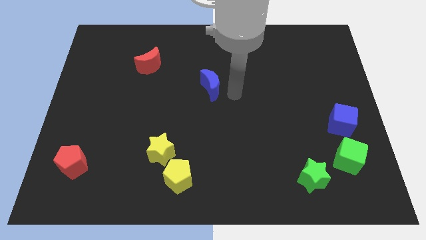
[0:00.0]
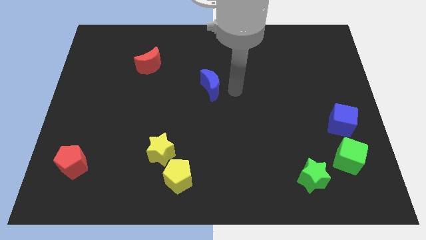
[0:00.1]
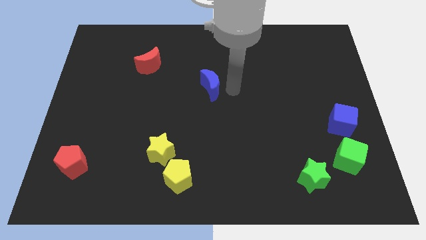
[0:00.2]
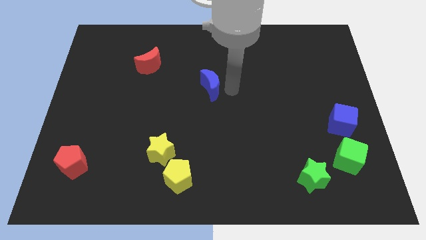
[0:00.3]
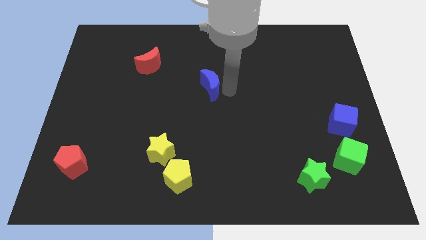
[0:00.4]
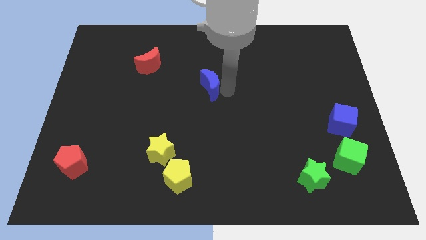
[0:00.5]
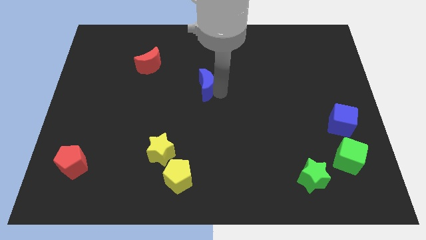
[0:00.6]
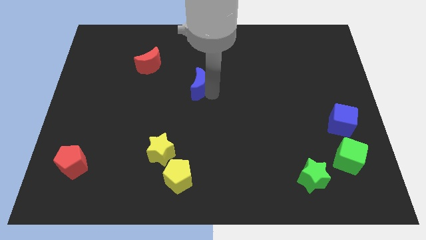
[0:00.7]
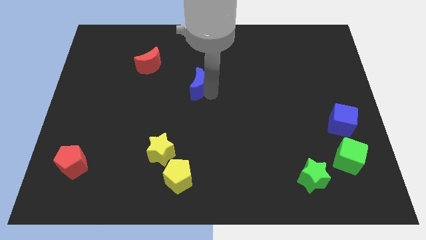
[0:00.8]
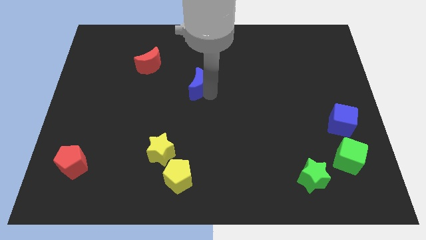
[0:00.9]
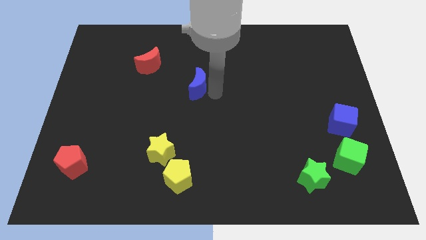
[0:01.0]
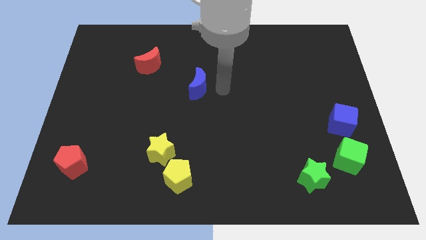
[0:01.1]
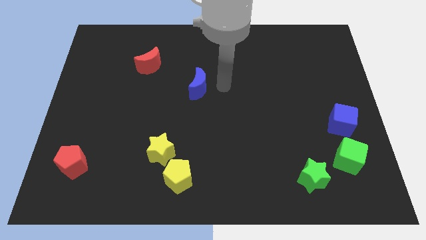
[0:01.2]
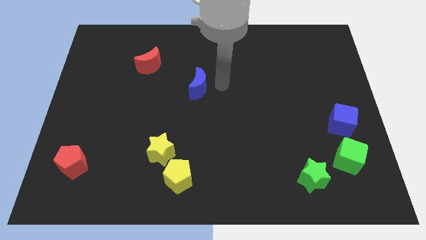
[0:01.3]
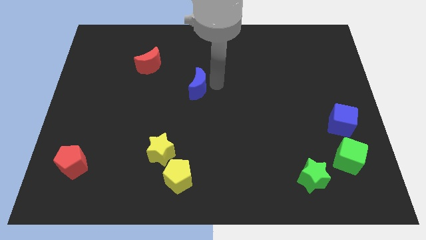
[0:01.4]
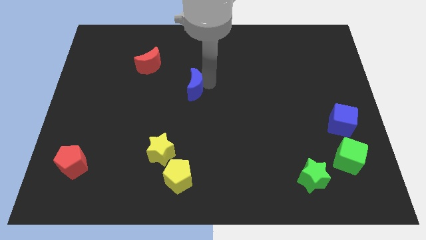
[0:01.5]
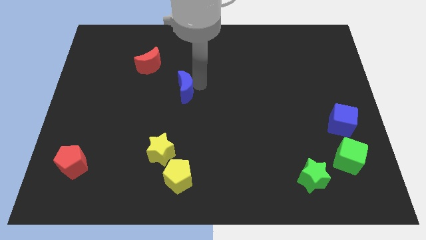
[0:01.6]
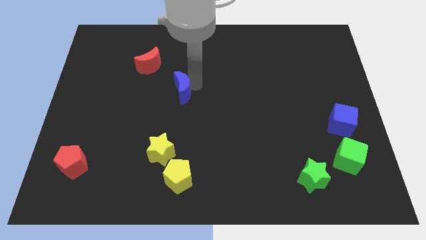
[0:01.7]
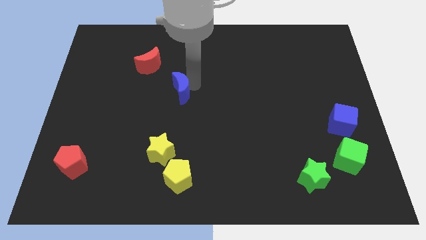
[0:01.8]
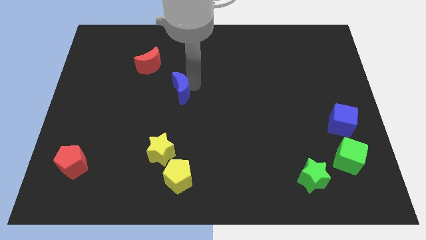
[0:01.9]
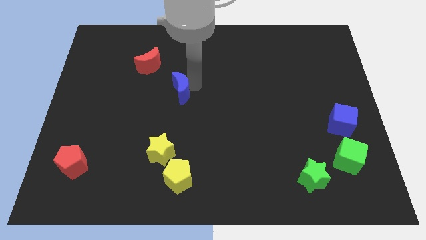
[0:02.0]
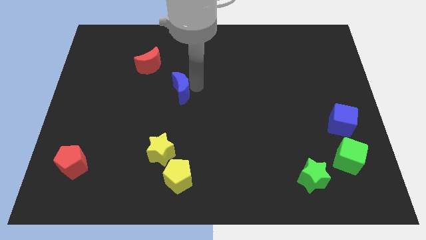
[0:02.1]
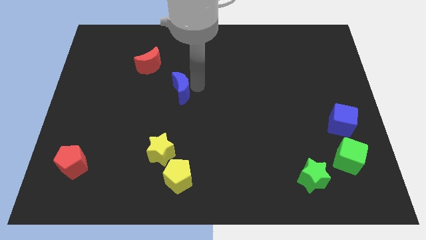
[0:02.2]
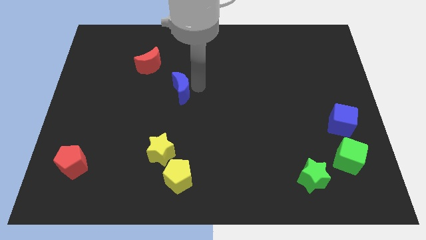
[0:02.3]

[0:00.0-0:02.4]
place the blue crescent vertically above the yellow pentagon

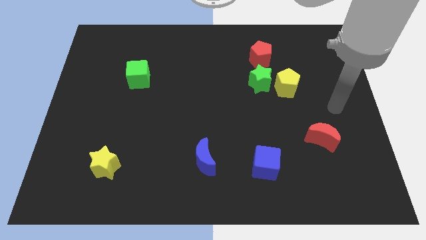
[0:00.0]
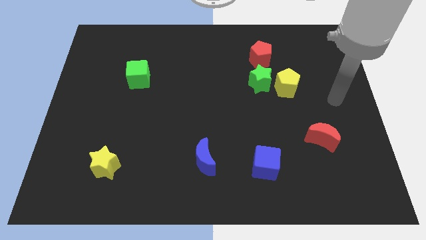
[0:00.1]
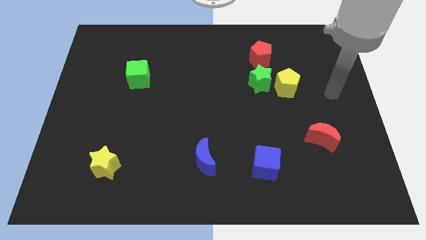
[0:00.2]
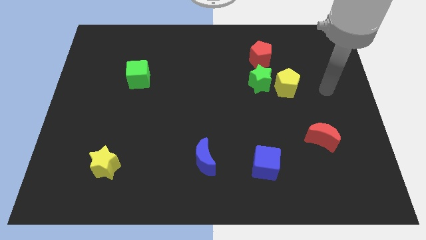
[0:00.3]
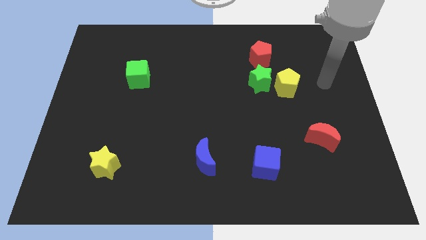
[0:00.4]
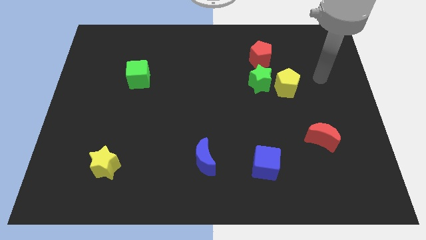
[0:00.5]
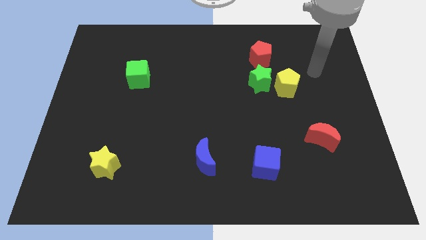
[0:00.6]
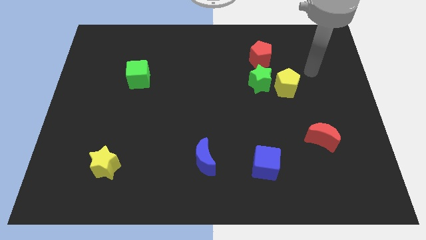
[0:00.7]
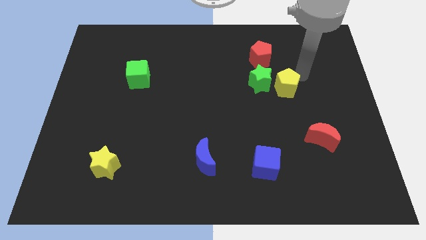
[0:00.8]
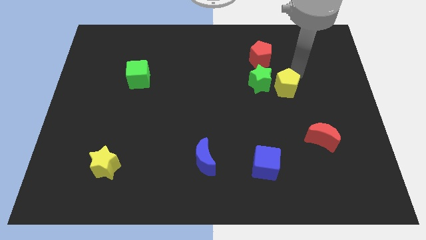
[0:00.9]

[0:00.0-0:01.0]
move arm near yellow pentagon

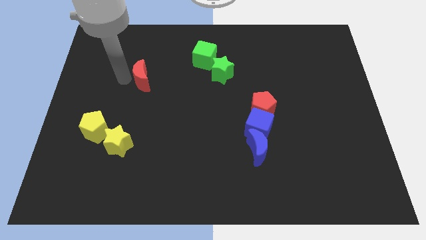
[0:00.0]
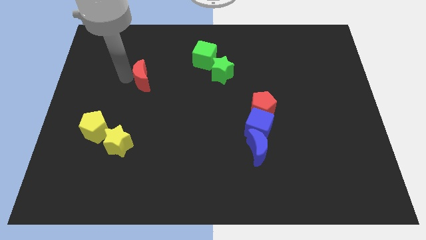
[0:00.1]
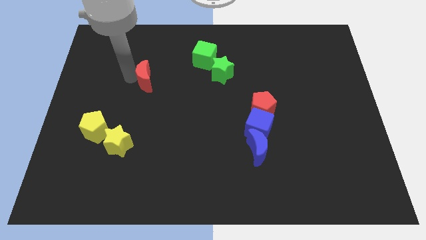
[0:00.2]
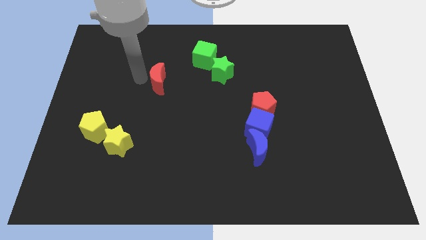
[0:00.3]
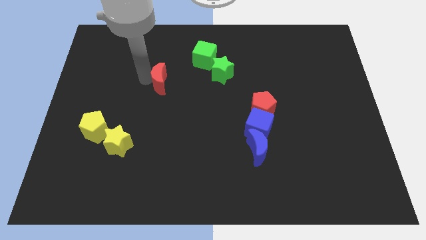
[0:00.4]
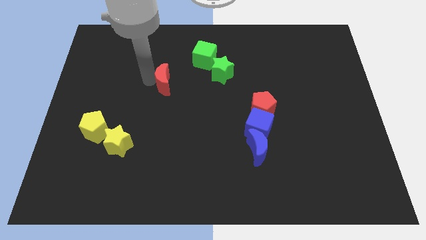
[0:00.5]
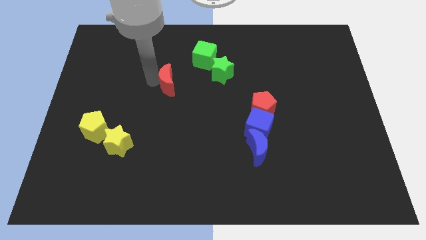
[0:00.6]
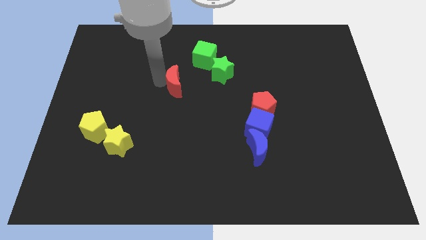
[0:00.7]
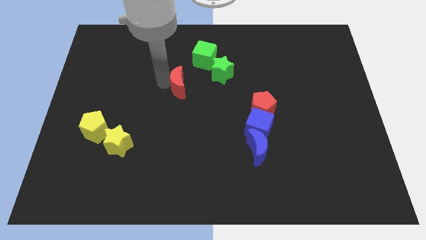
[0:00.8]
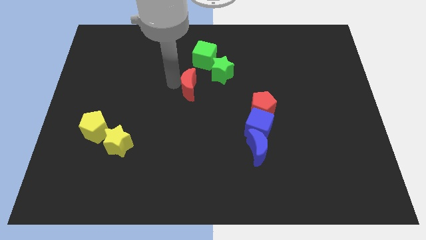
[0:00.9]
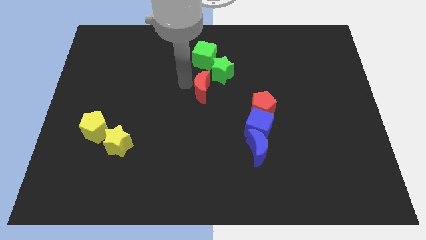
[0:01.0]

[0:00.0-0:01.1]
move the red crescent to the right

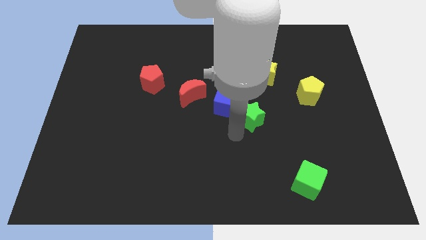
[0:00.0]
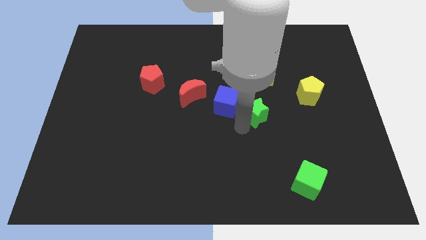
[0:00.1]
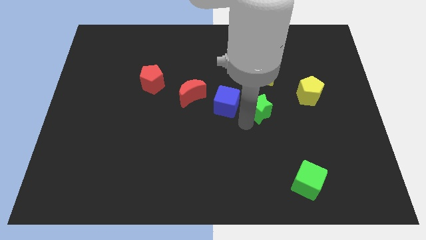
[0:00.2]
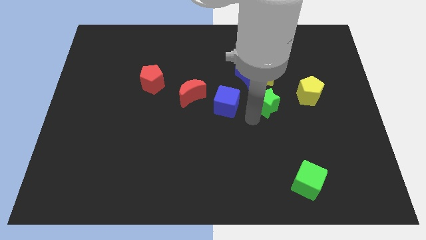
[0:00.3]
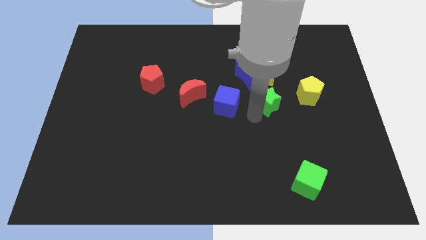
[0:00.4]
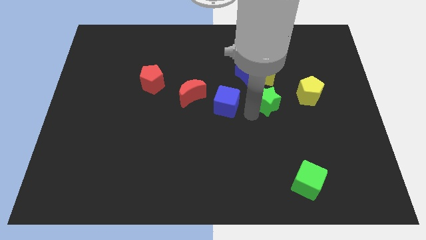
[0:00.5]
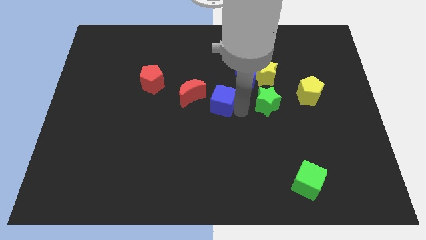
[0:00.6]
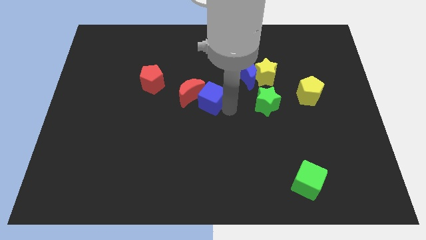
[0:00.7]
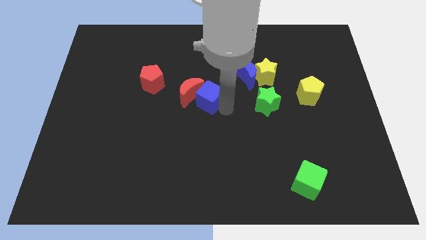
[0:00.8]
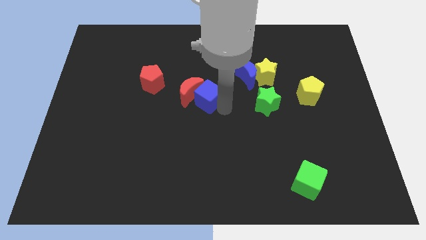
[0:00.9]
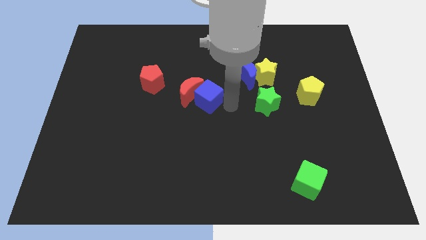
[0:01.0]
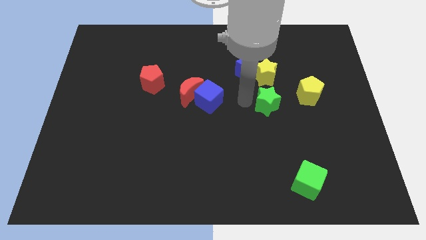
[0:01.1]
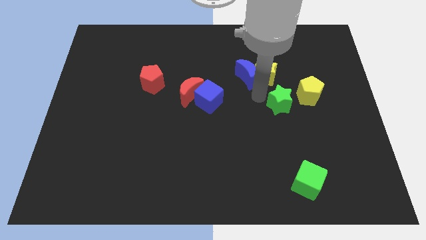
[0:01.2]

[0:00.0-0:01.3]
slide the blue cube into the red moon

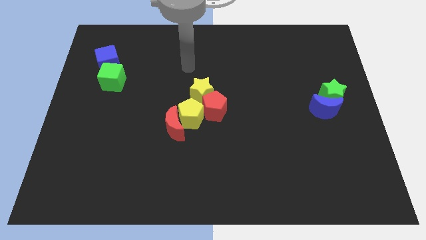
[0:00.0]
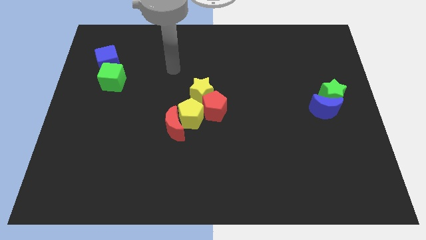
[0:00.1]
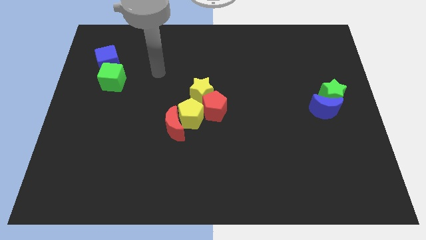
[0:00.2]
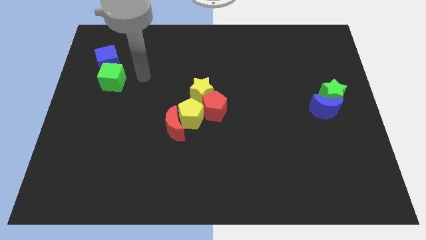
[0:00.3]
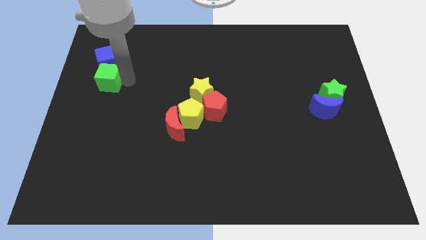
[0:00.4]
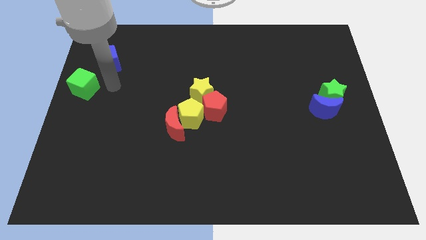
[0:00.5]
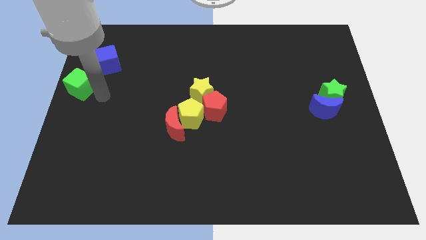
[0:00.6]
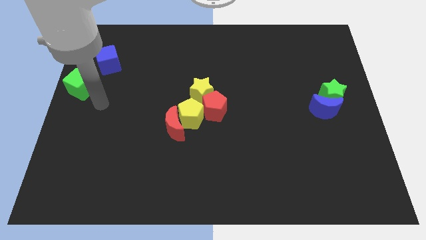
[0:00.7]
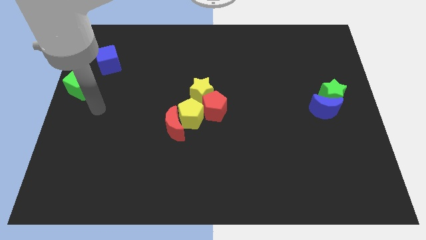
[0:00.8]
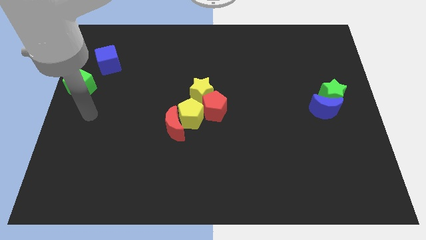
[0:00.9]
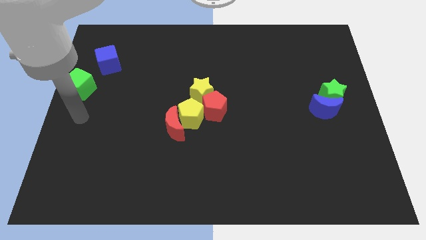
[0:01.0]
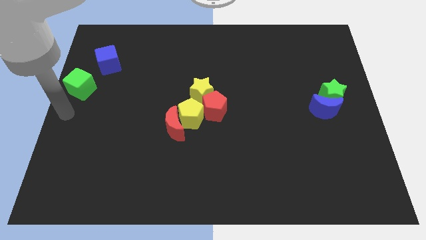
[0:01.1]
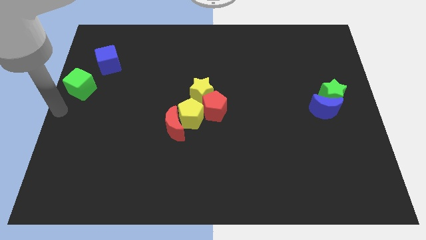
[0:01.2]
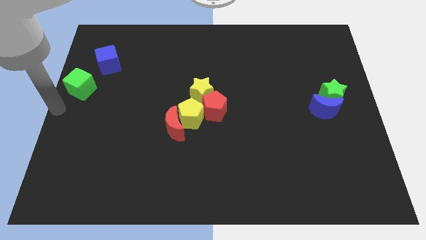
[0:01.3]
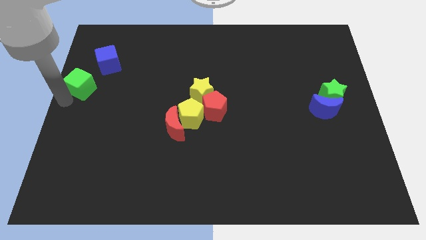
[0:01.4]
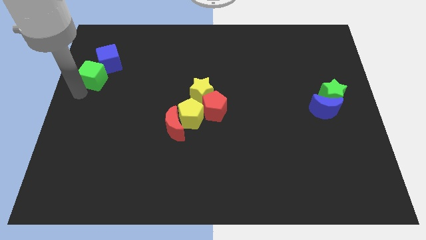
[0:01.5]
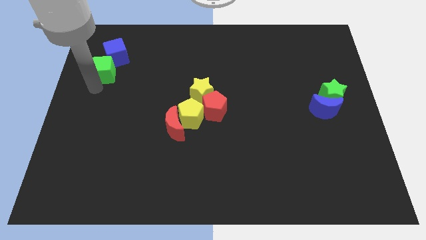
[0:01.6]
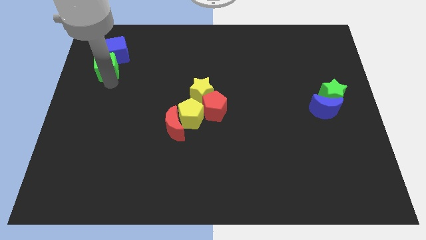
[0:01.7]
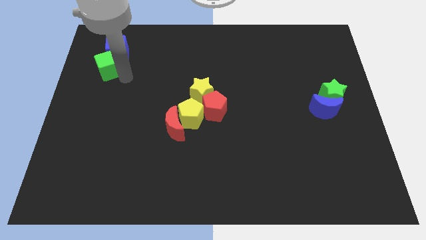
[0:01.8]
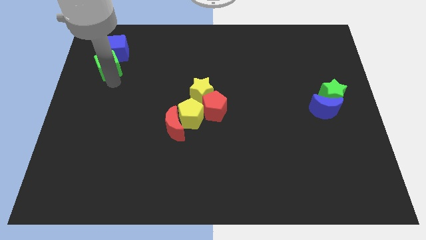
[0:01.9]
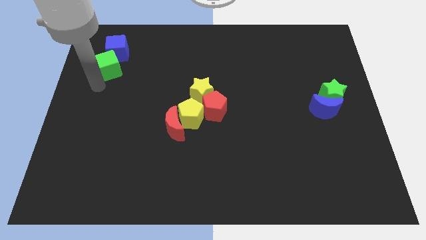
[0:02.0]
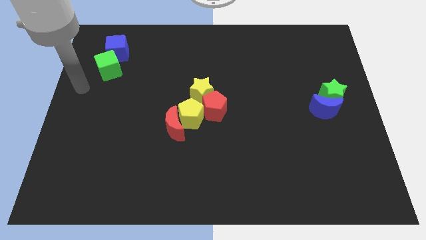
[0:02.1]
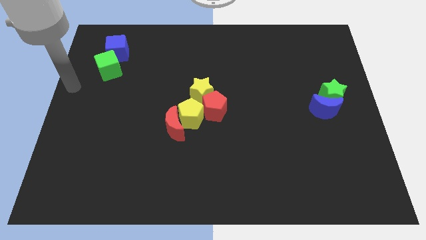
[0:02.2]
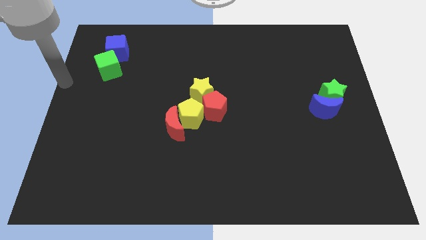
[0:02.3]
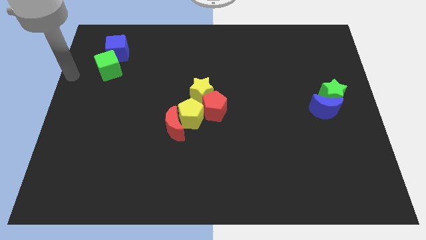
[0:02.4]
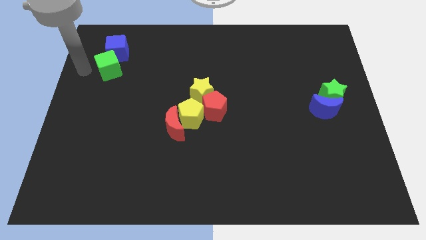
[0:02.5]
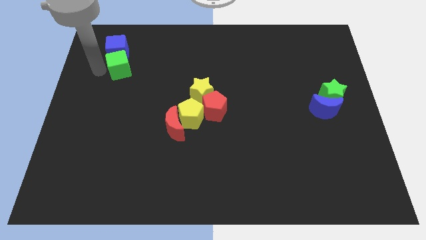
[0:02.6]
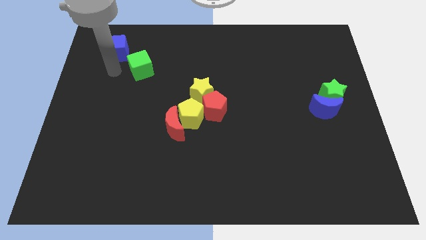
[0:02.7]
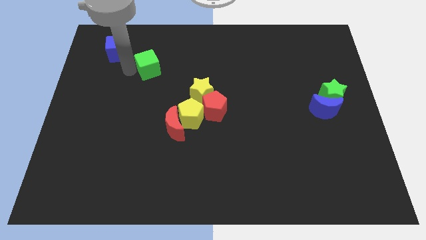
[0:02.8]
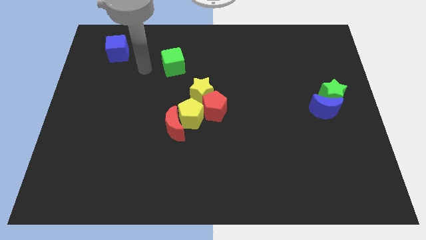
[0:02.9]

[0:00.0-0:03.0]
push the green cube towards the right of the board

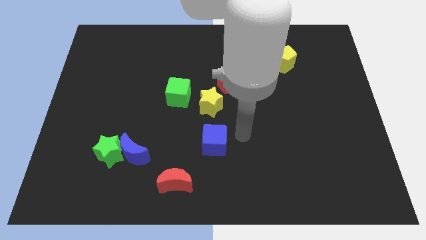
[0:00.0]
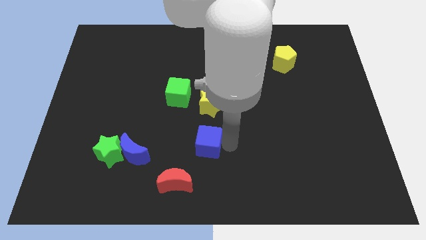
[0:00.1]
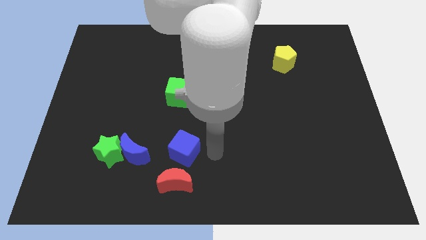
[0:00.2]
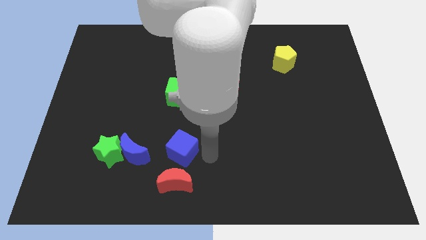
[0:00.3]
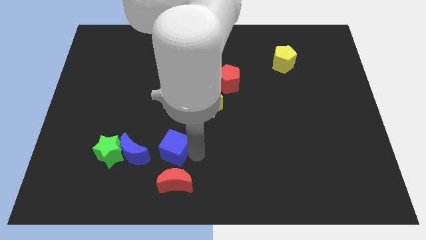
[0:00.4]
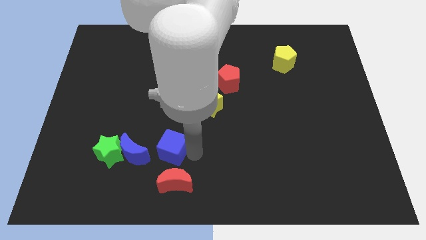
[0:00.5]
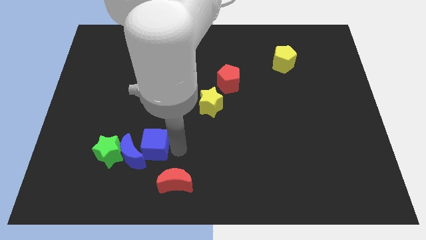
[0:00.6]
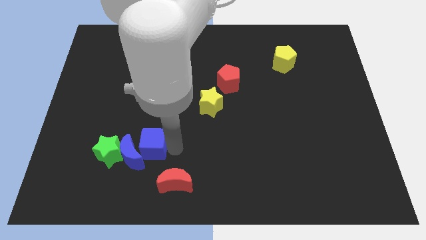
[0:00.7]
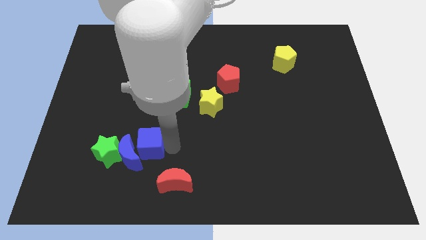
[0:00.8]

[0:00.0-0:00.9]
push blue cube into the blue moon
